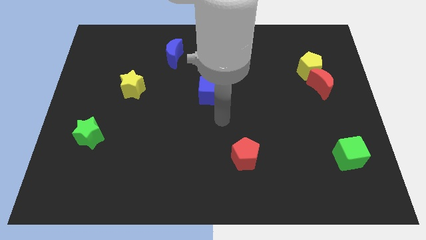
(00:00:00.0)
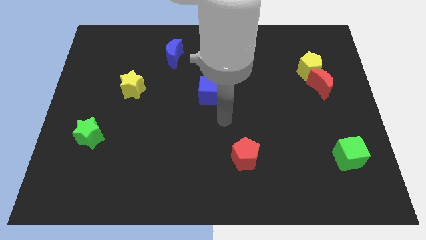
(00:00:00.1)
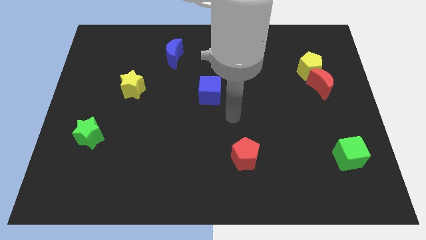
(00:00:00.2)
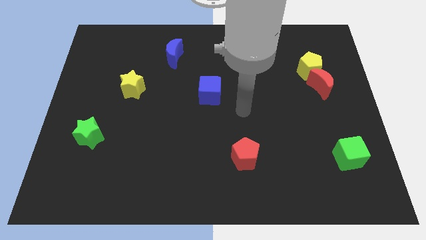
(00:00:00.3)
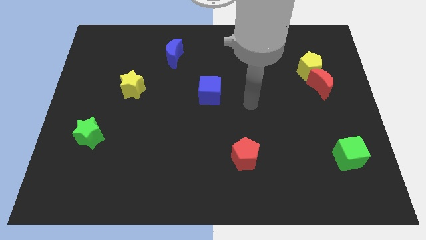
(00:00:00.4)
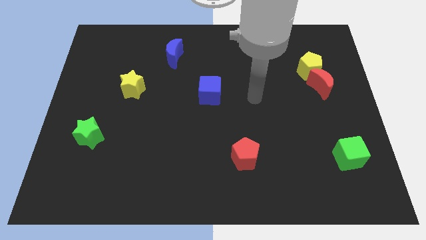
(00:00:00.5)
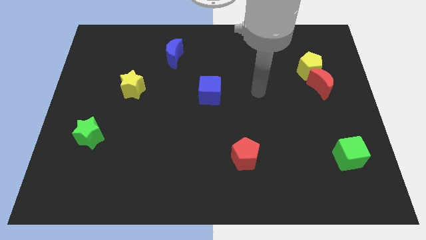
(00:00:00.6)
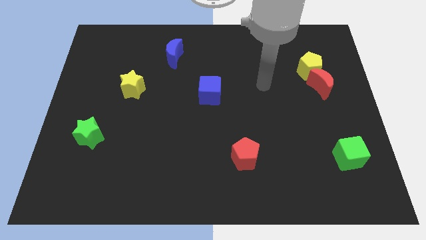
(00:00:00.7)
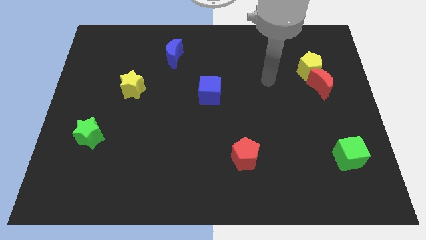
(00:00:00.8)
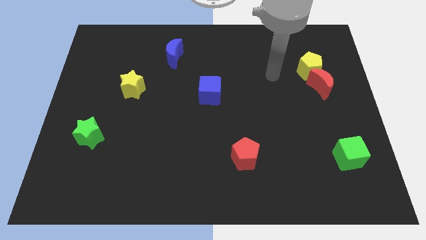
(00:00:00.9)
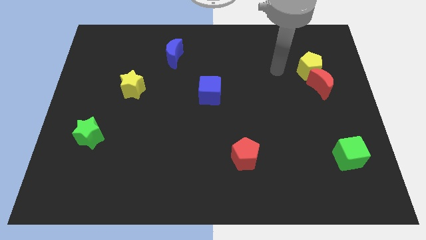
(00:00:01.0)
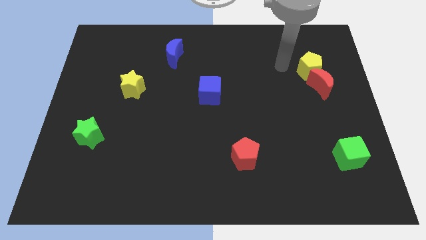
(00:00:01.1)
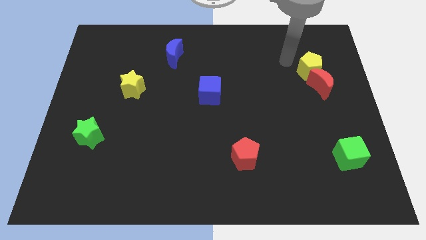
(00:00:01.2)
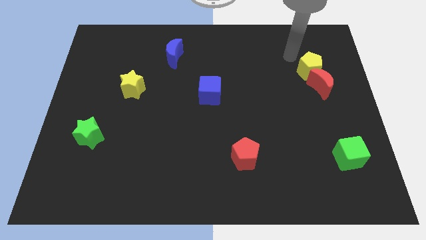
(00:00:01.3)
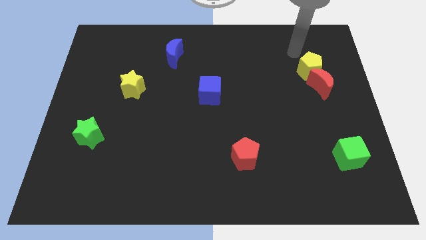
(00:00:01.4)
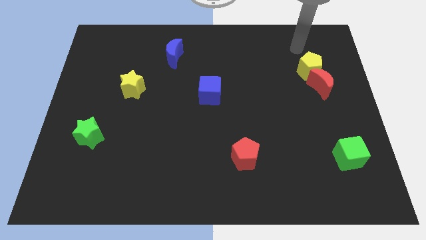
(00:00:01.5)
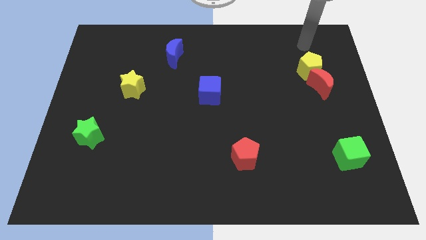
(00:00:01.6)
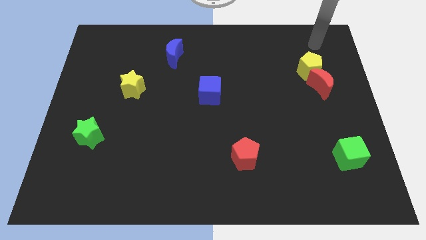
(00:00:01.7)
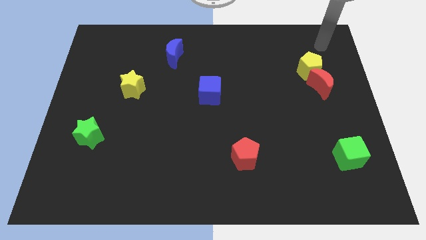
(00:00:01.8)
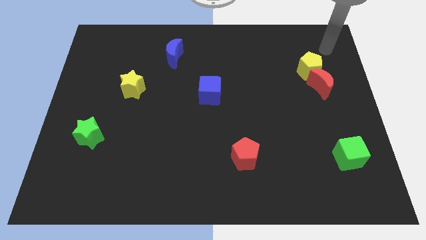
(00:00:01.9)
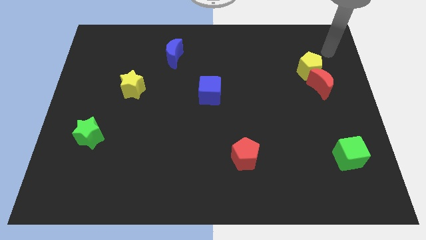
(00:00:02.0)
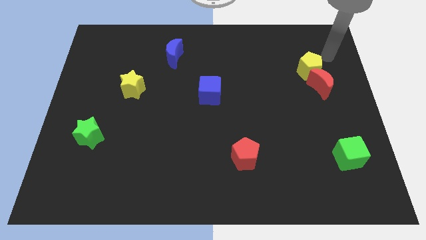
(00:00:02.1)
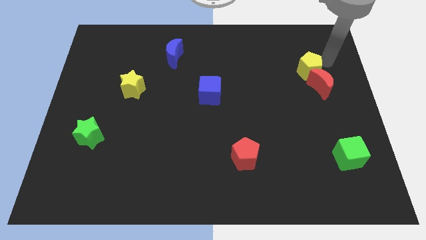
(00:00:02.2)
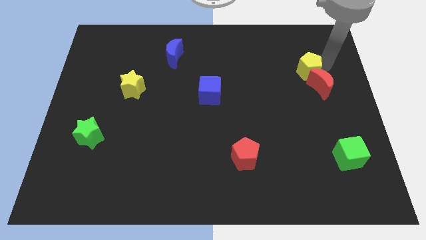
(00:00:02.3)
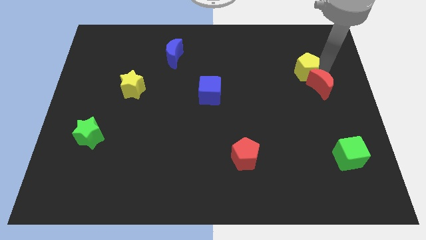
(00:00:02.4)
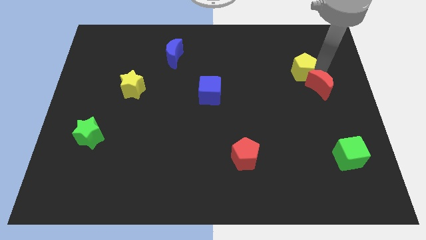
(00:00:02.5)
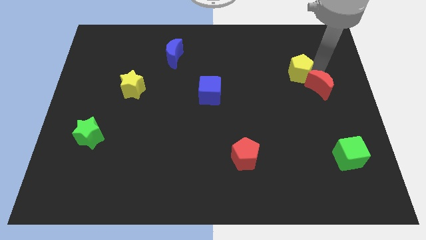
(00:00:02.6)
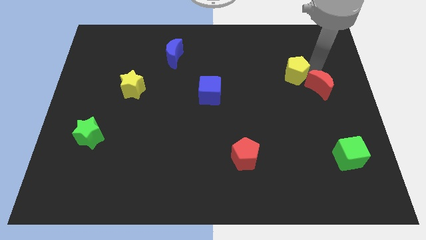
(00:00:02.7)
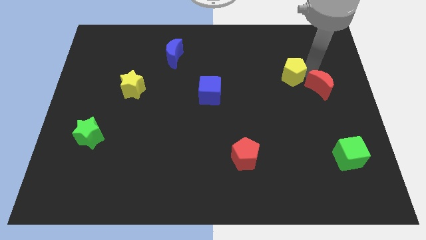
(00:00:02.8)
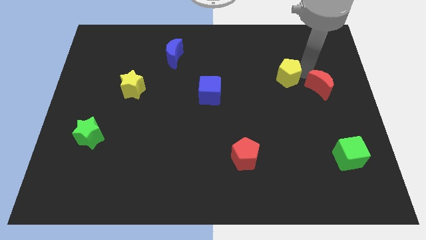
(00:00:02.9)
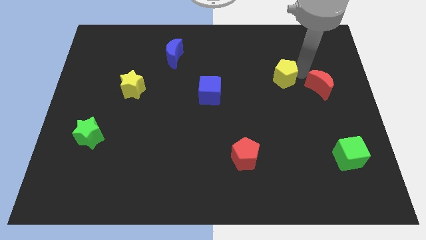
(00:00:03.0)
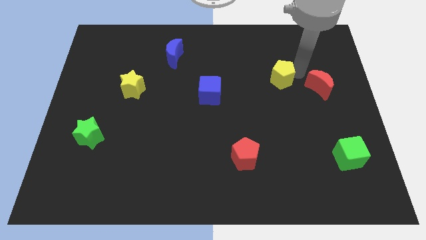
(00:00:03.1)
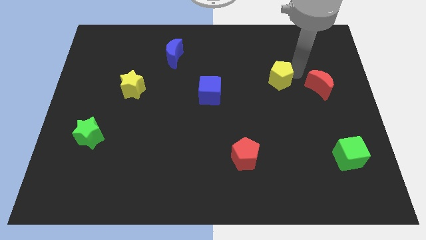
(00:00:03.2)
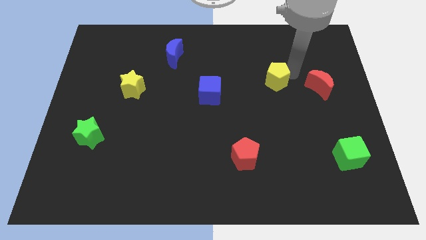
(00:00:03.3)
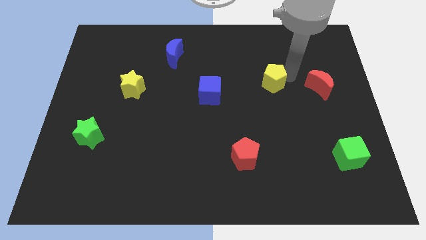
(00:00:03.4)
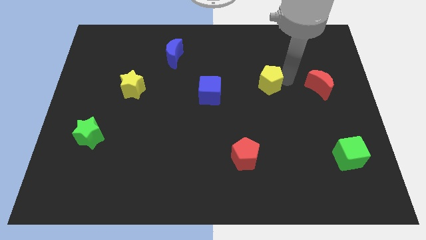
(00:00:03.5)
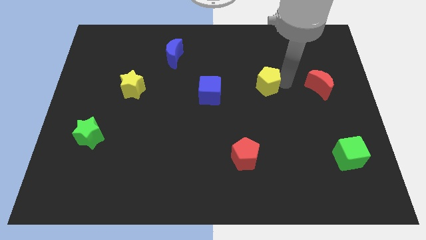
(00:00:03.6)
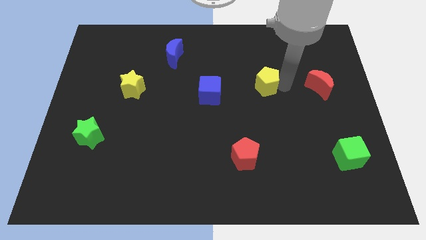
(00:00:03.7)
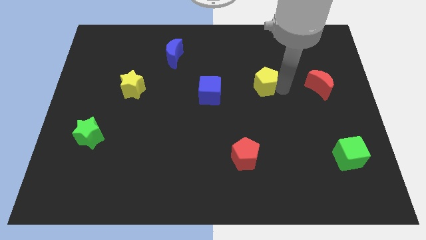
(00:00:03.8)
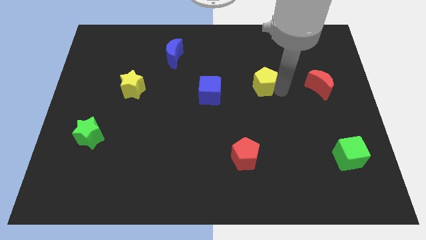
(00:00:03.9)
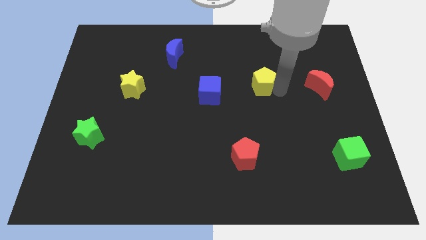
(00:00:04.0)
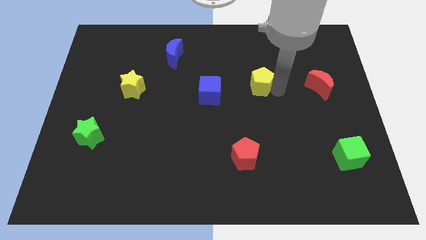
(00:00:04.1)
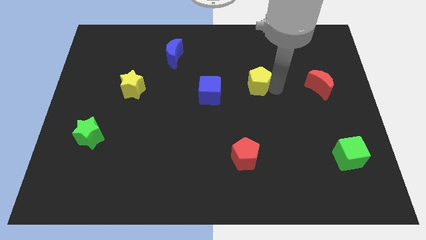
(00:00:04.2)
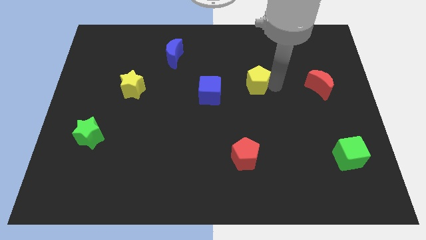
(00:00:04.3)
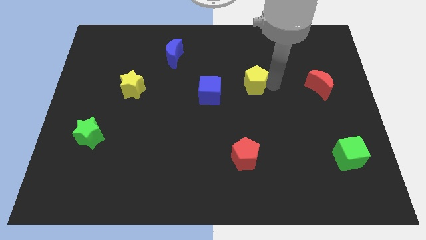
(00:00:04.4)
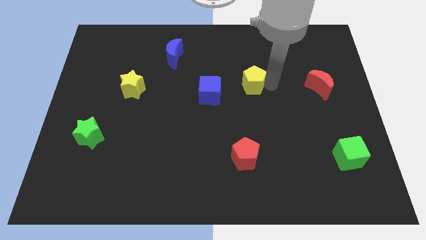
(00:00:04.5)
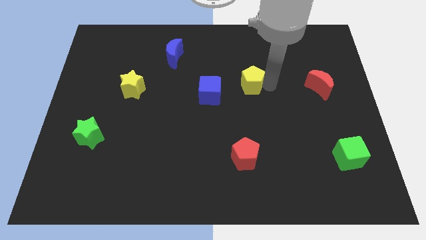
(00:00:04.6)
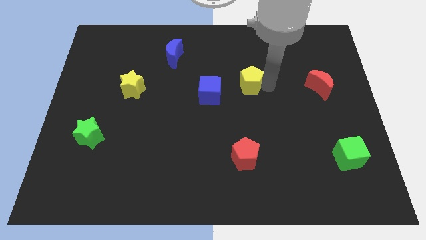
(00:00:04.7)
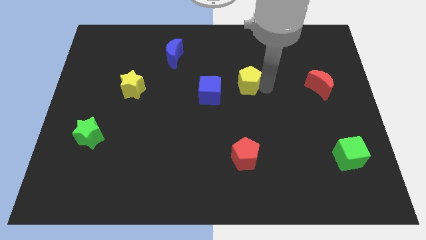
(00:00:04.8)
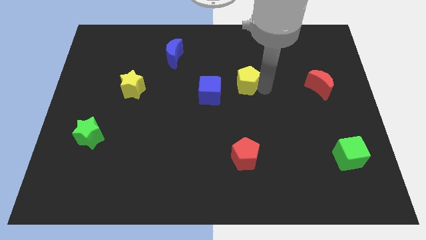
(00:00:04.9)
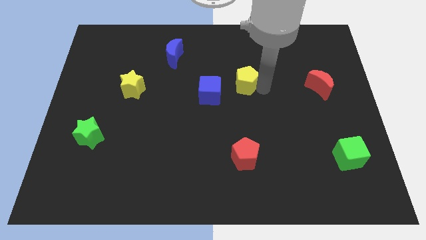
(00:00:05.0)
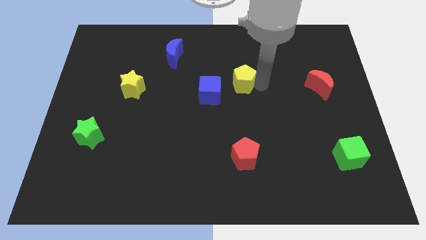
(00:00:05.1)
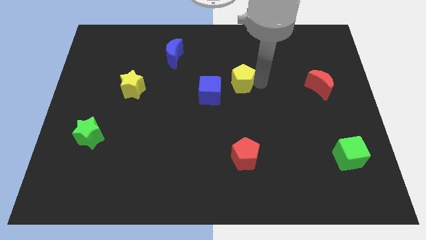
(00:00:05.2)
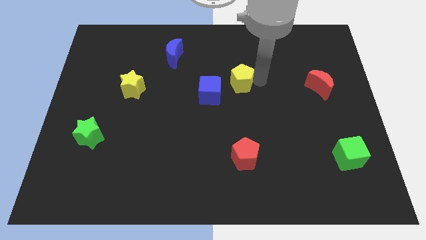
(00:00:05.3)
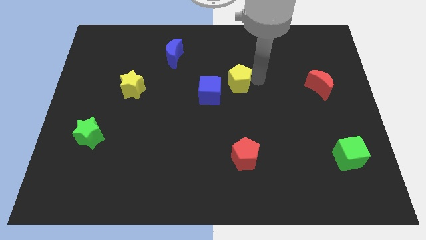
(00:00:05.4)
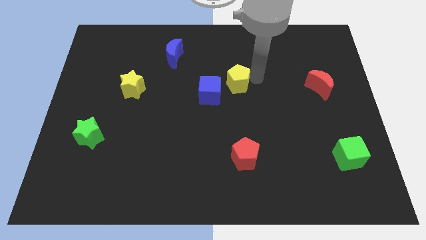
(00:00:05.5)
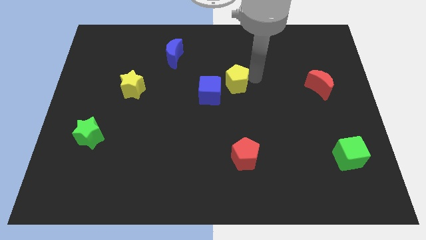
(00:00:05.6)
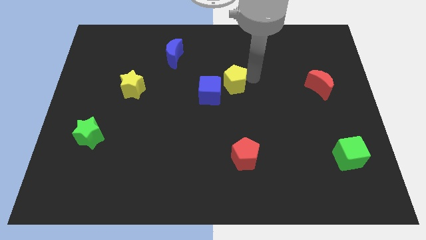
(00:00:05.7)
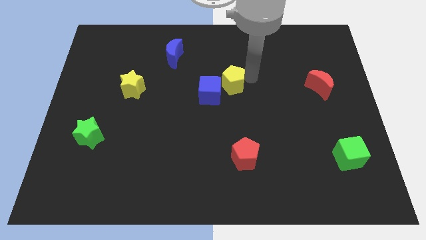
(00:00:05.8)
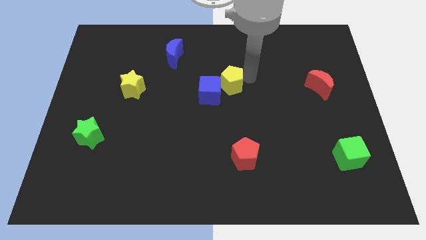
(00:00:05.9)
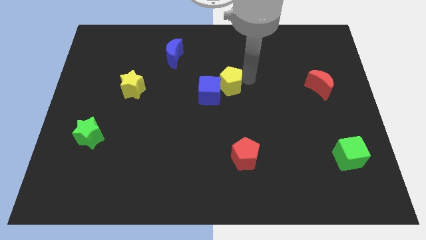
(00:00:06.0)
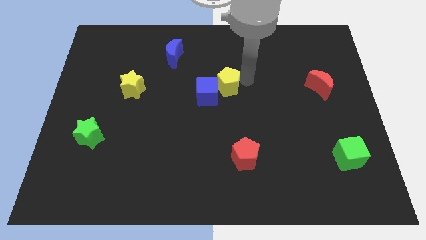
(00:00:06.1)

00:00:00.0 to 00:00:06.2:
push the yellow pentagon close to the blue cube

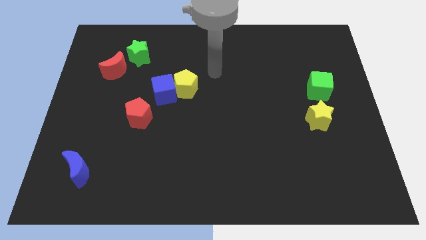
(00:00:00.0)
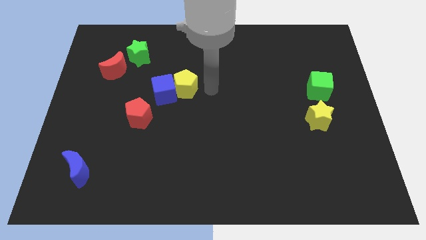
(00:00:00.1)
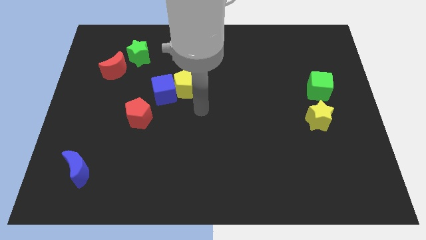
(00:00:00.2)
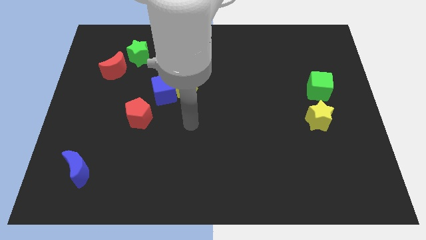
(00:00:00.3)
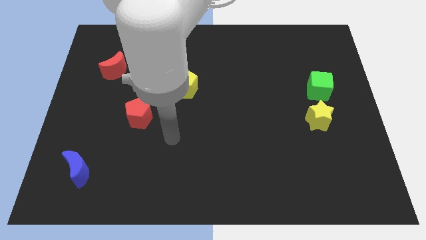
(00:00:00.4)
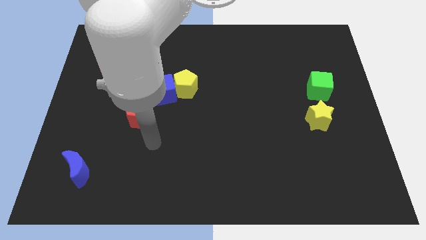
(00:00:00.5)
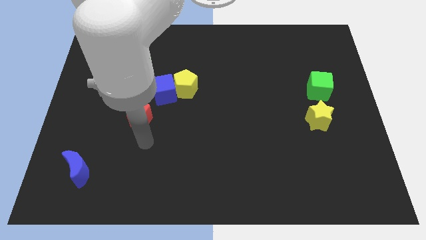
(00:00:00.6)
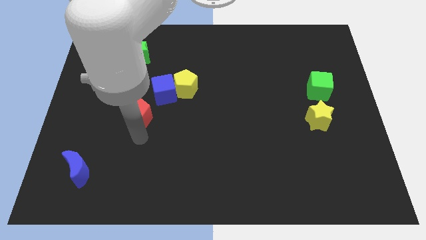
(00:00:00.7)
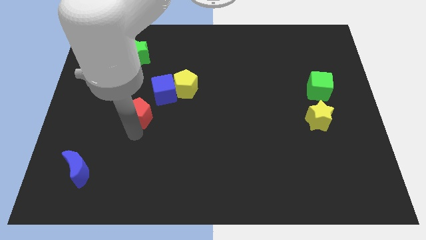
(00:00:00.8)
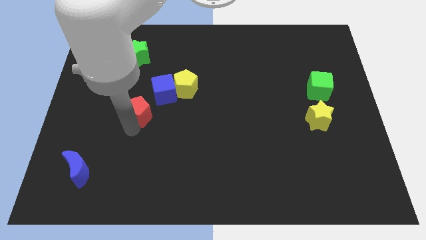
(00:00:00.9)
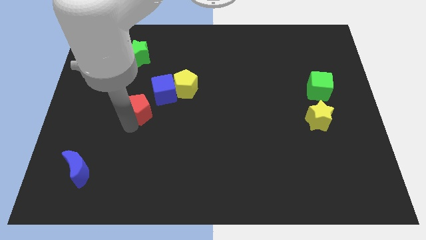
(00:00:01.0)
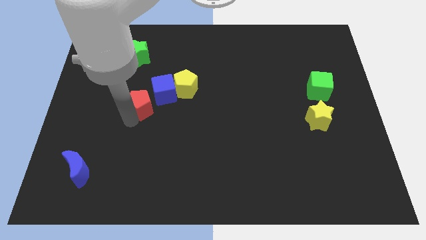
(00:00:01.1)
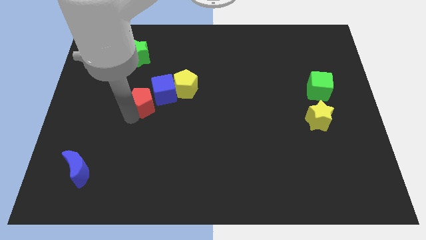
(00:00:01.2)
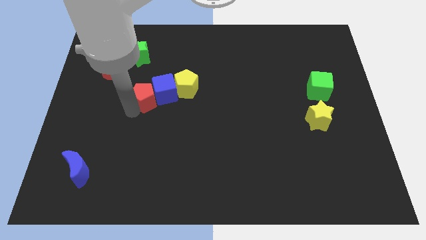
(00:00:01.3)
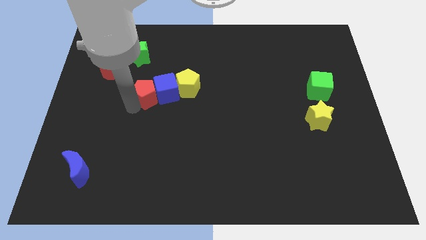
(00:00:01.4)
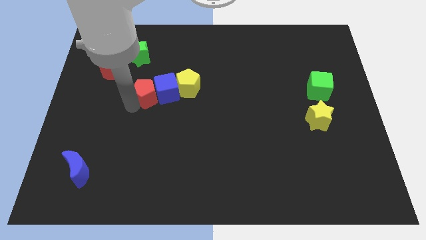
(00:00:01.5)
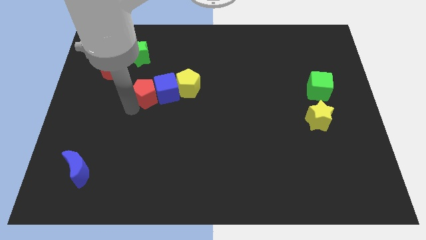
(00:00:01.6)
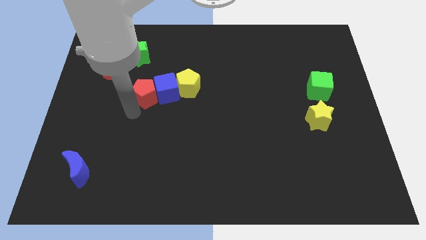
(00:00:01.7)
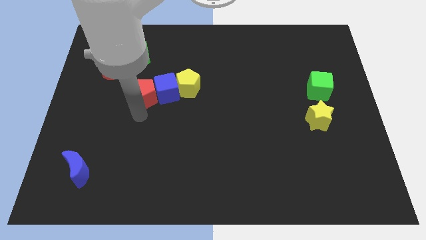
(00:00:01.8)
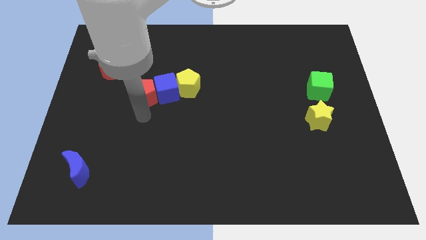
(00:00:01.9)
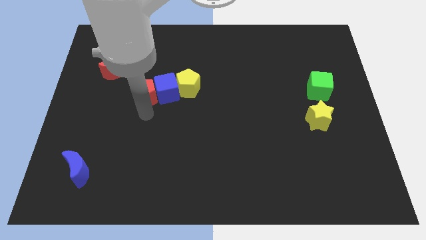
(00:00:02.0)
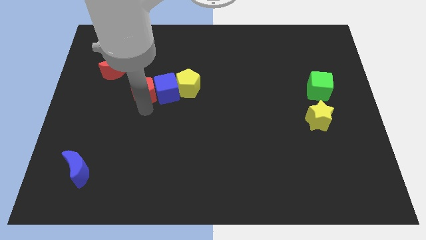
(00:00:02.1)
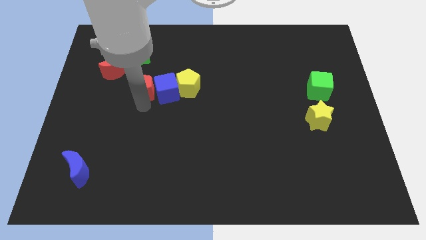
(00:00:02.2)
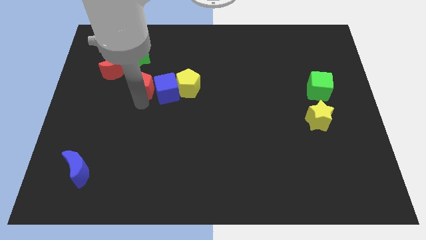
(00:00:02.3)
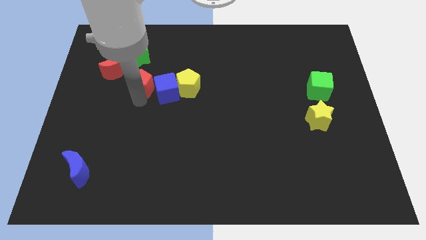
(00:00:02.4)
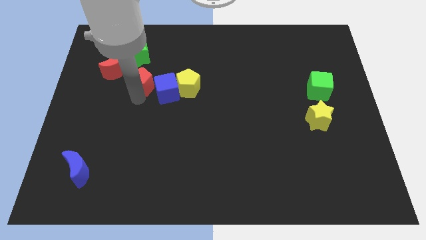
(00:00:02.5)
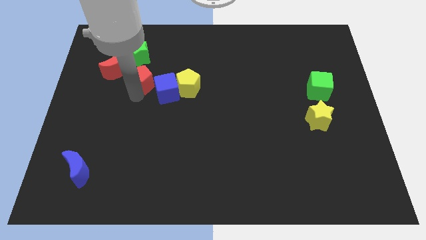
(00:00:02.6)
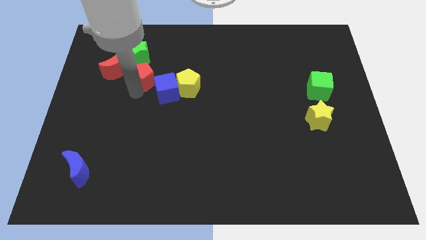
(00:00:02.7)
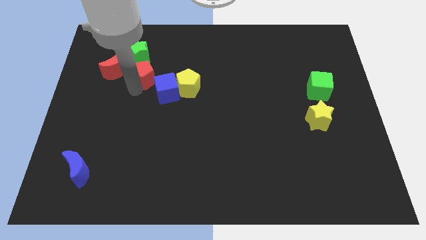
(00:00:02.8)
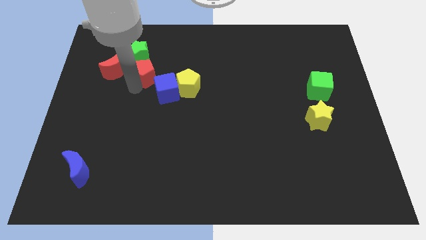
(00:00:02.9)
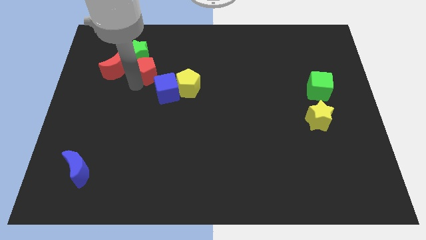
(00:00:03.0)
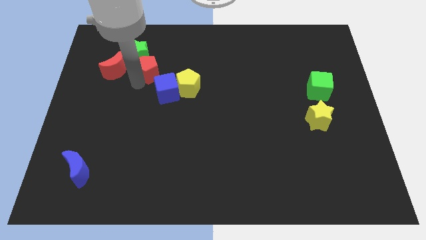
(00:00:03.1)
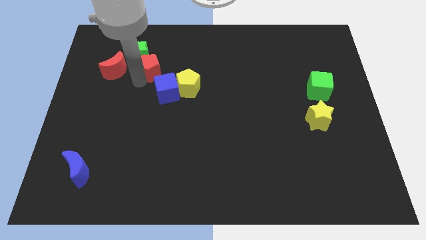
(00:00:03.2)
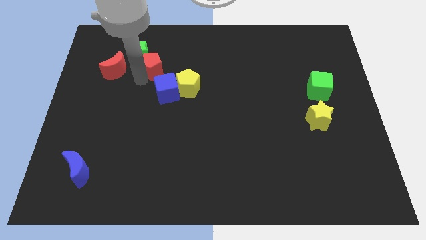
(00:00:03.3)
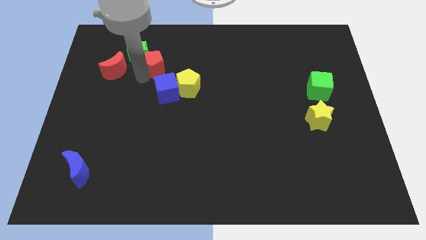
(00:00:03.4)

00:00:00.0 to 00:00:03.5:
push the red pentagon towards the green star
